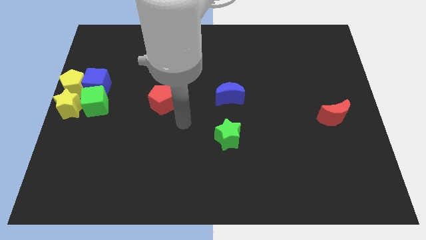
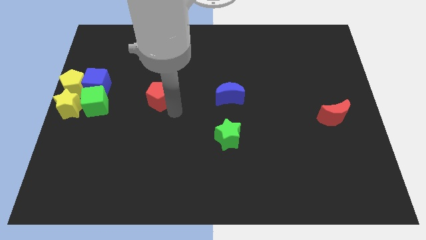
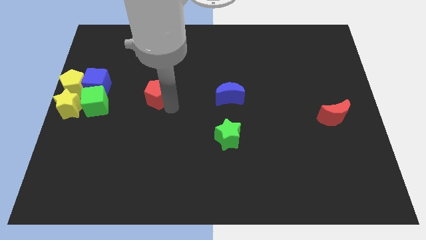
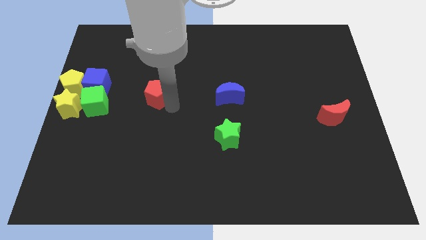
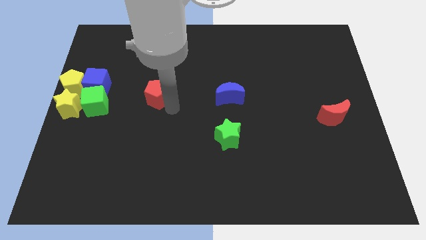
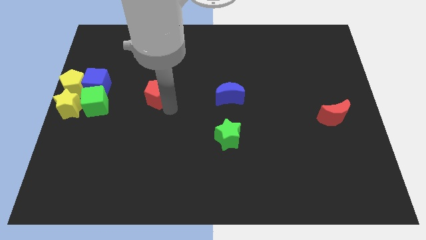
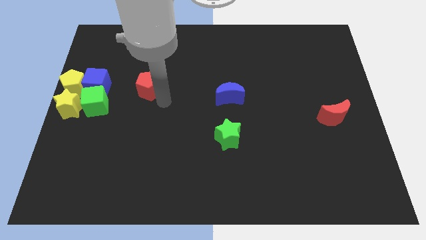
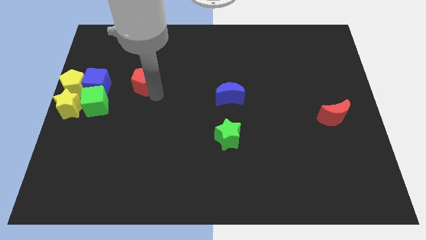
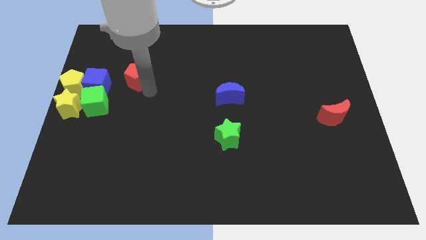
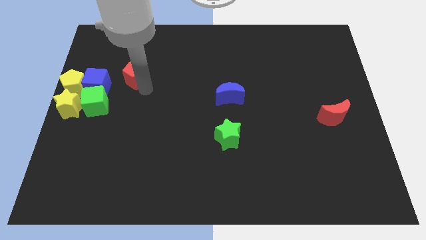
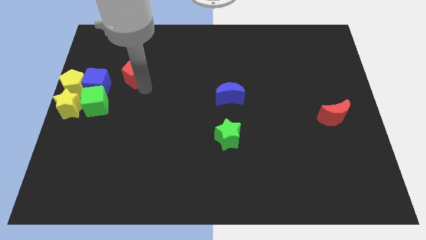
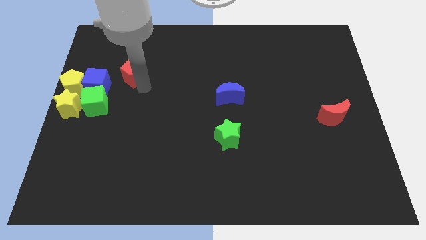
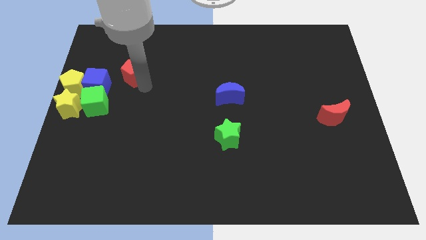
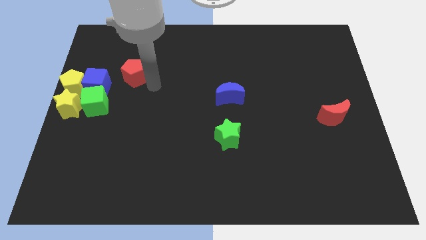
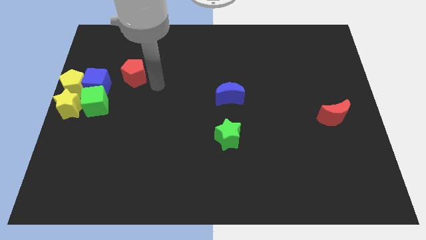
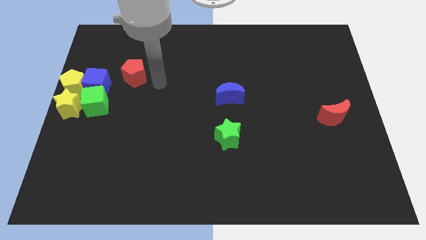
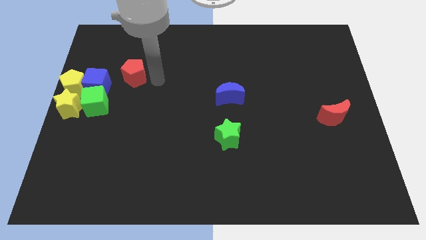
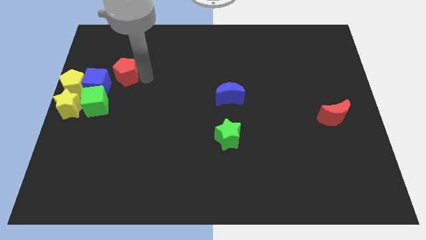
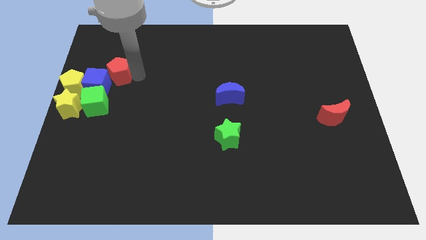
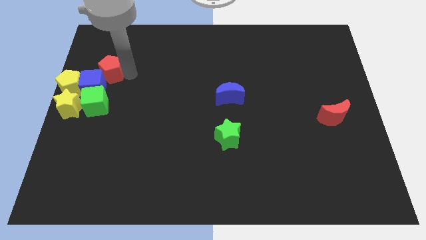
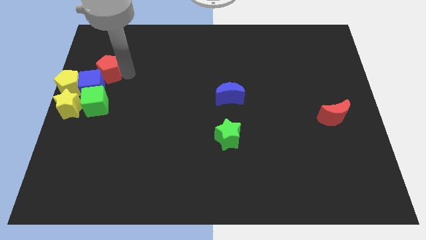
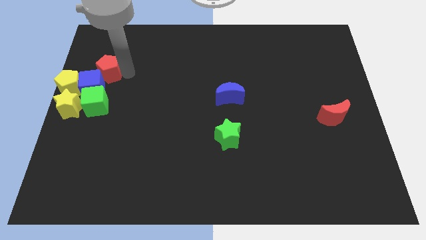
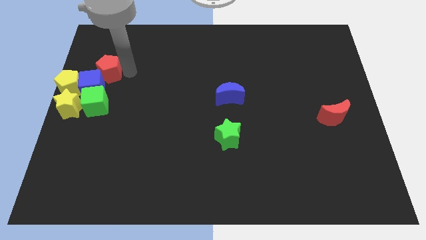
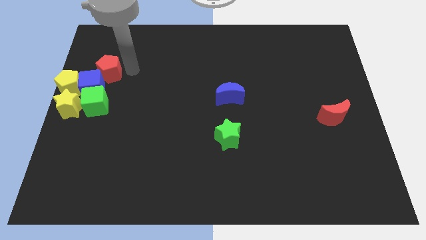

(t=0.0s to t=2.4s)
place the red pentagon near the blue cube

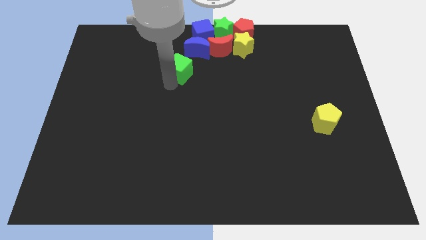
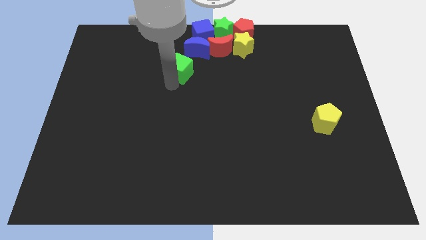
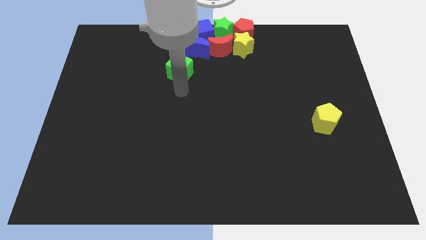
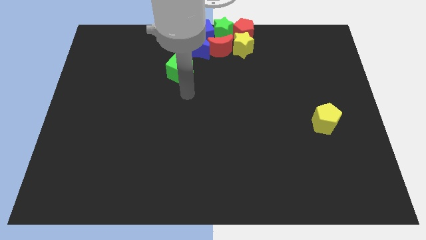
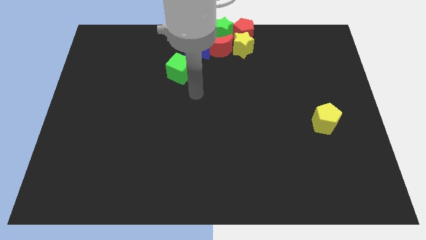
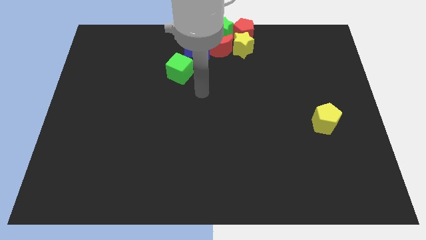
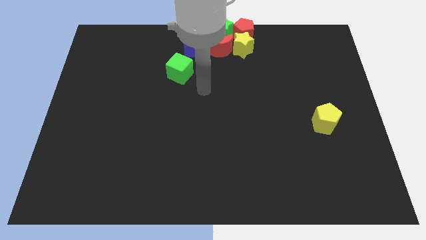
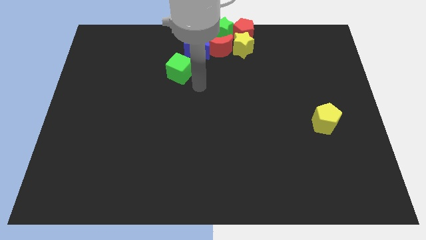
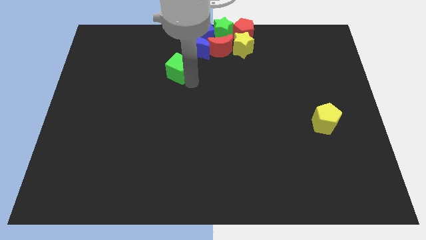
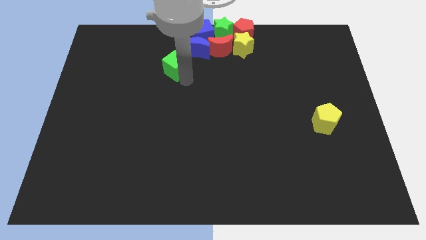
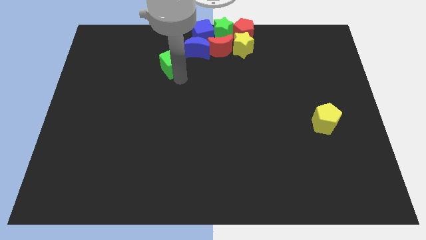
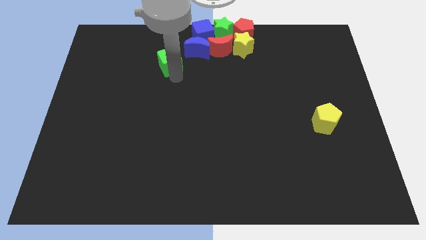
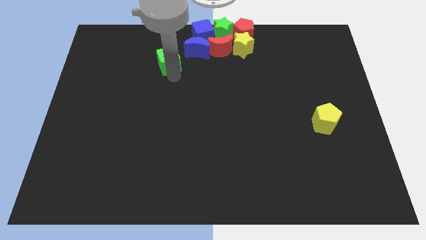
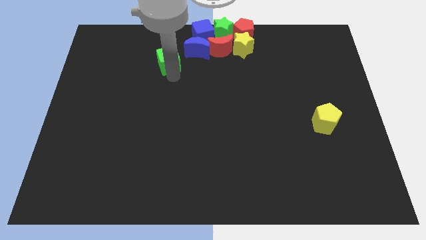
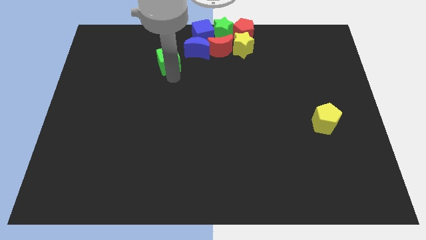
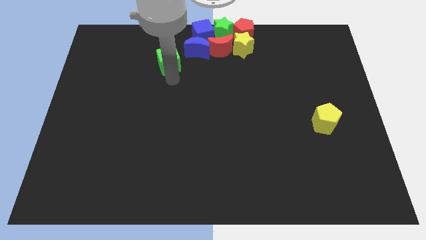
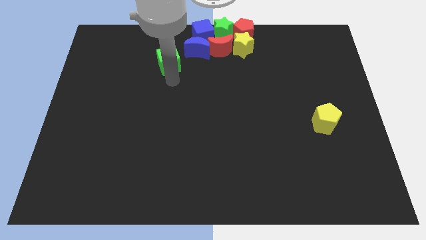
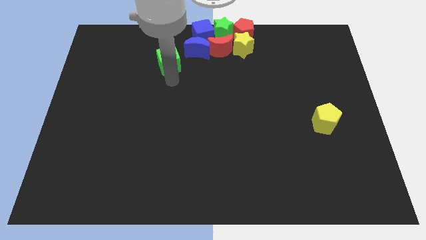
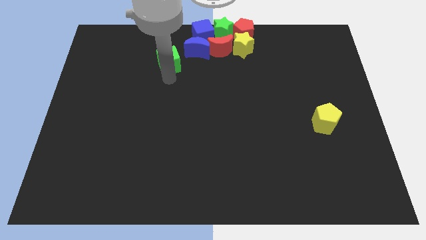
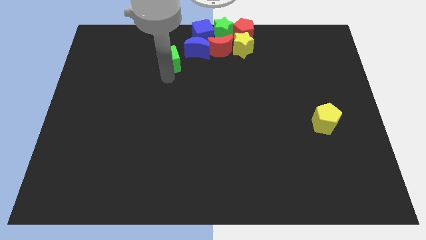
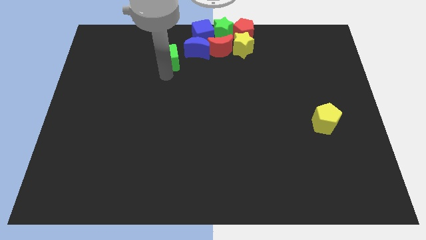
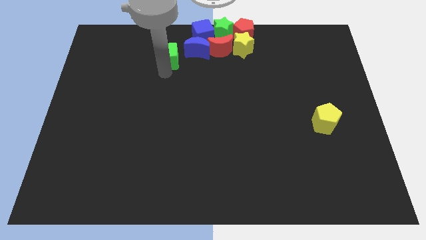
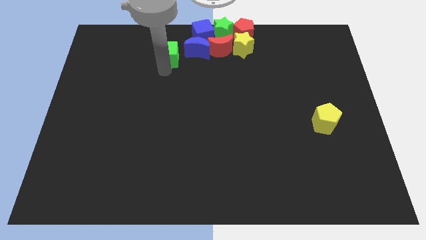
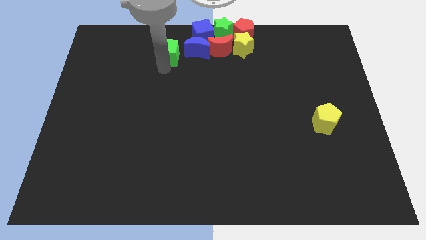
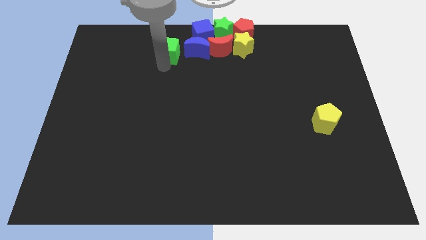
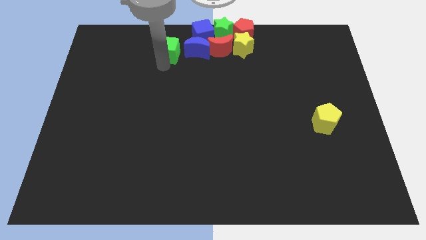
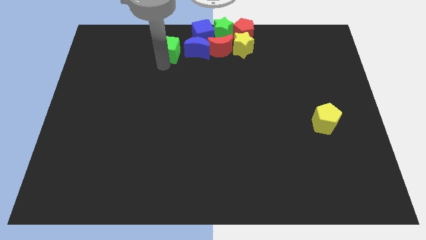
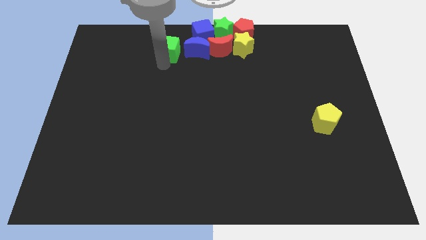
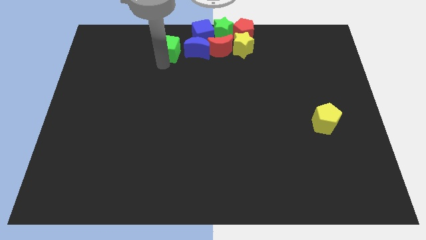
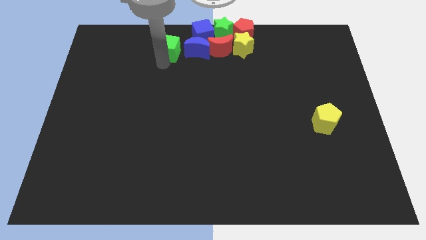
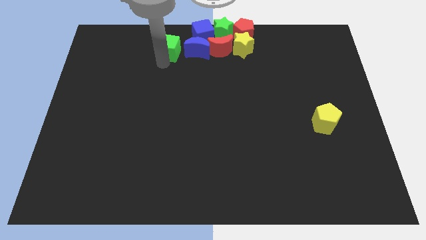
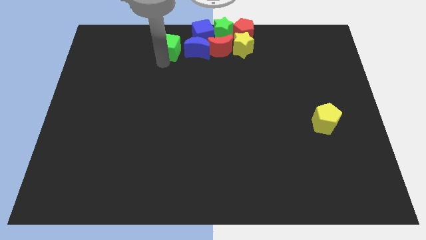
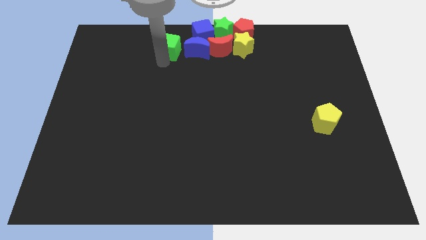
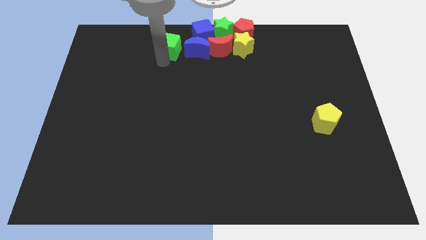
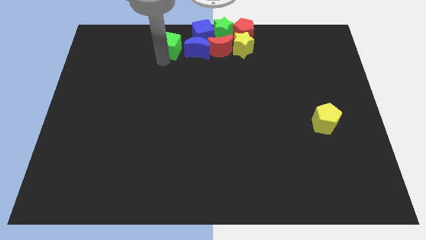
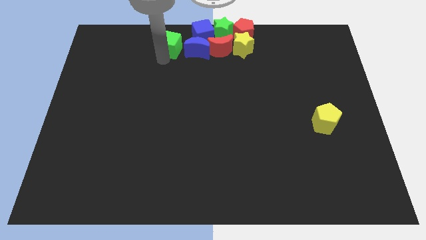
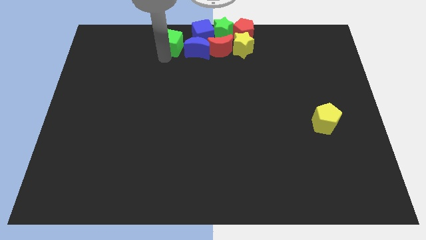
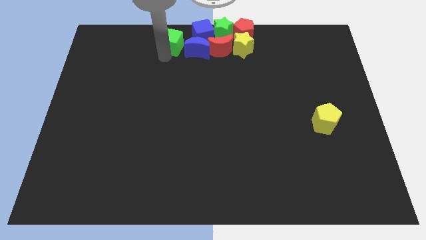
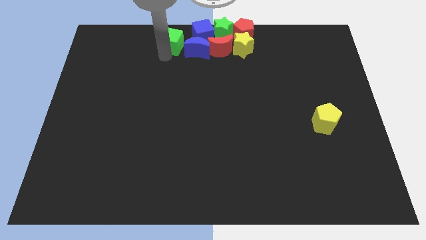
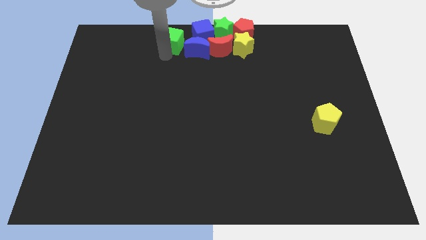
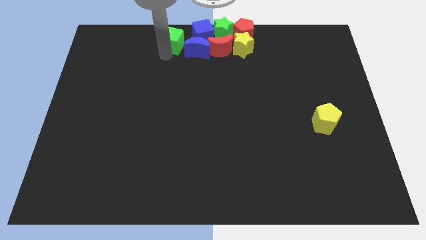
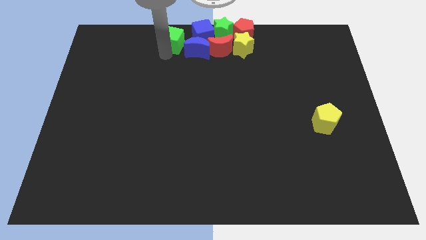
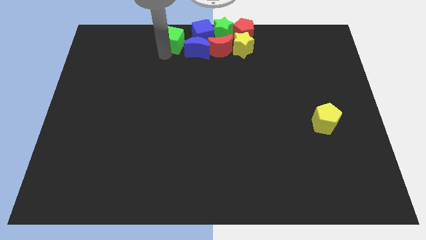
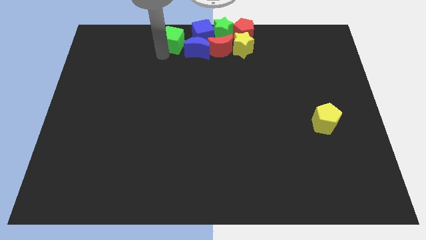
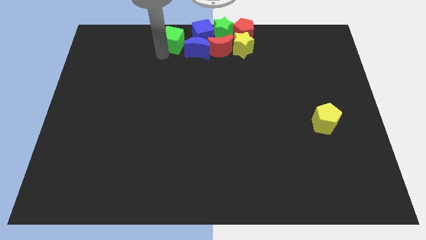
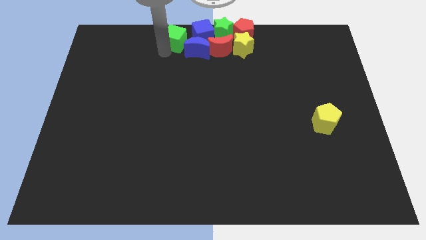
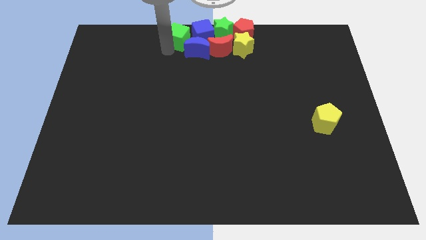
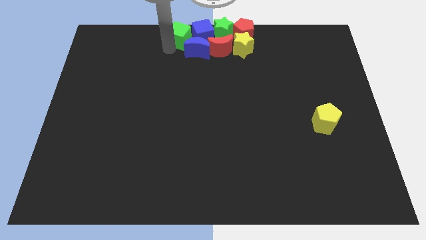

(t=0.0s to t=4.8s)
place the green cube left to the blue cube to form a horizontal line

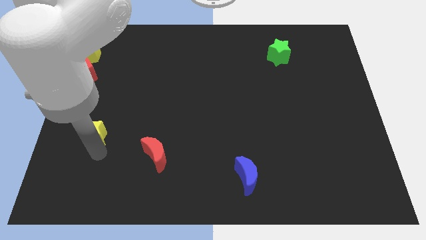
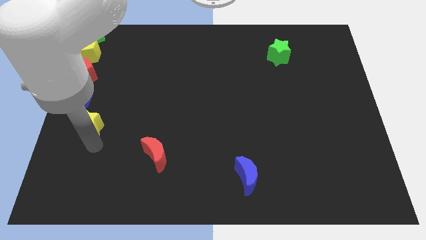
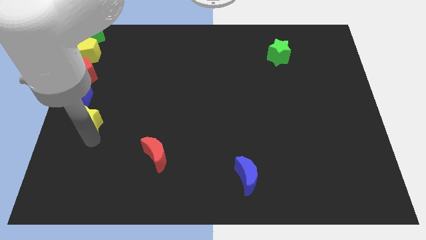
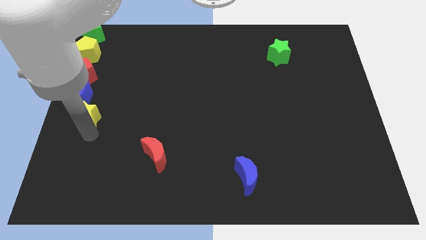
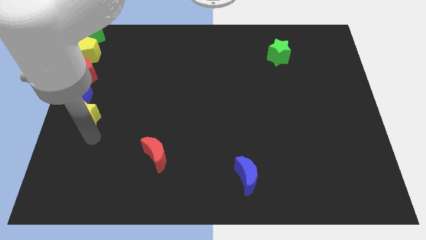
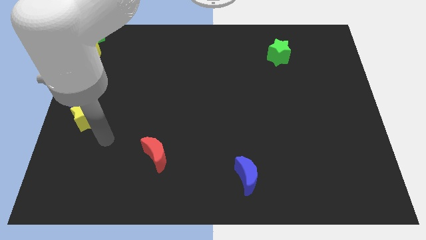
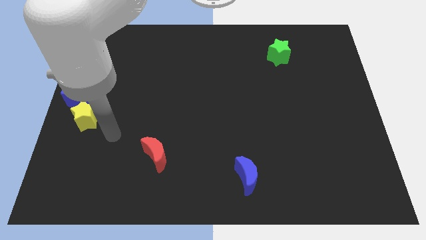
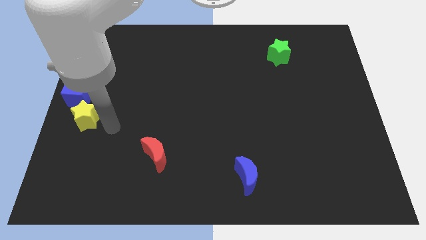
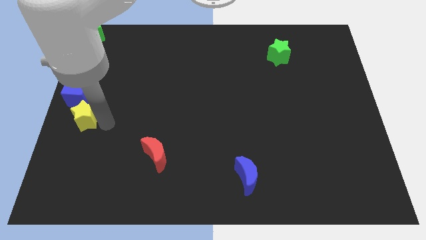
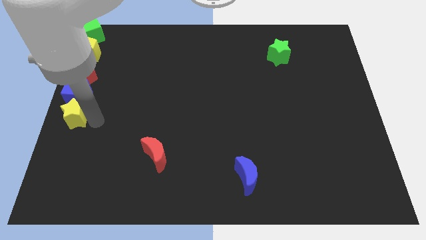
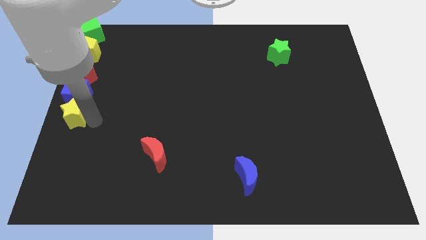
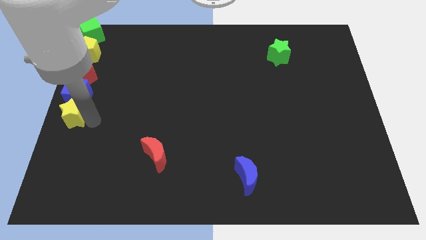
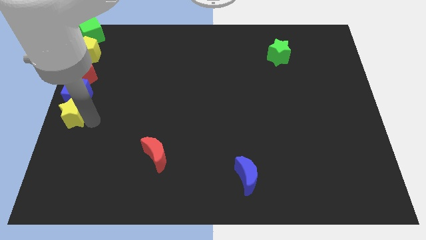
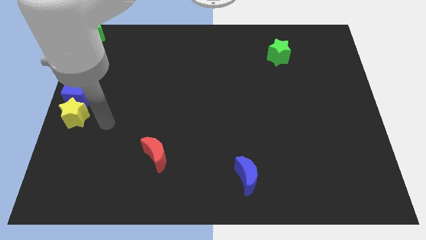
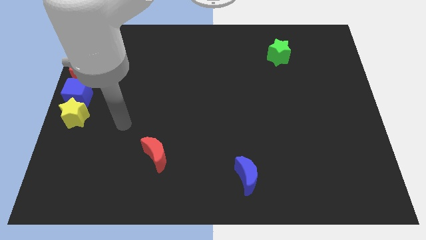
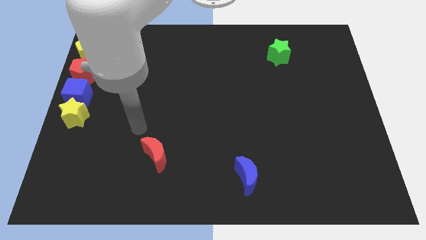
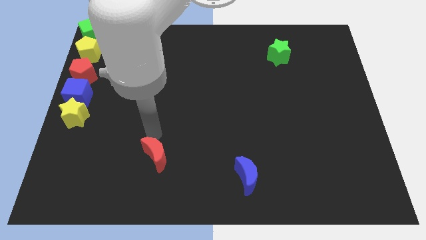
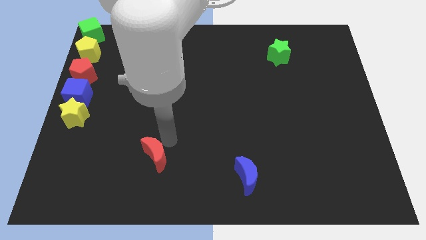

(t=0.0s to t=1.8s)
move the yellow star below the blue cube
